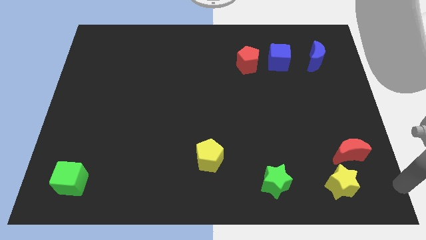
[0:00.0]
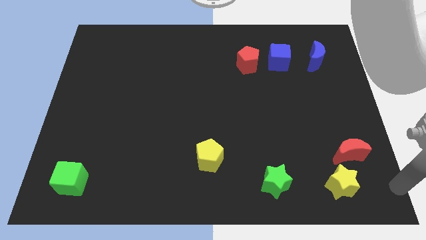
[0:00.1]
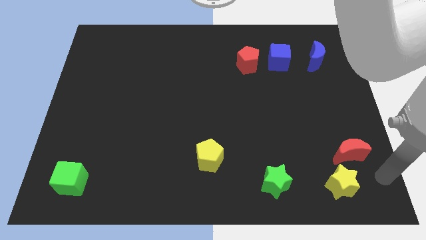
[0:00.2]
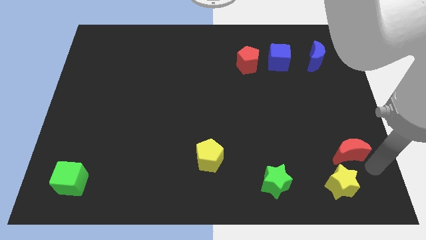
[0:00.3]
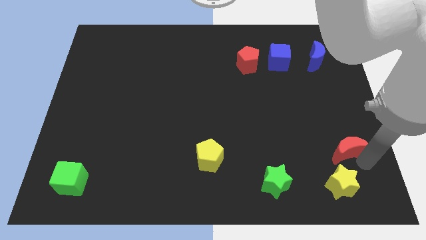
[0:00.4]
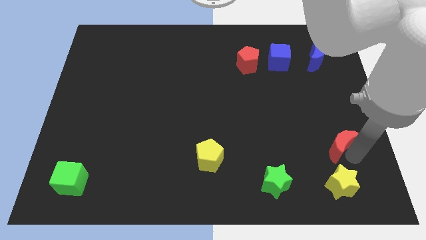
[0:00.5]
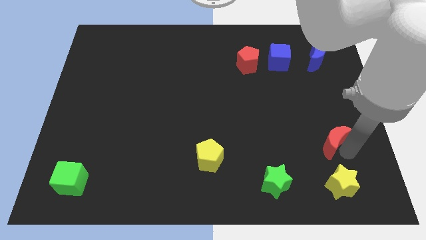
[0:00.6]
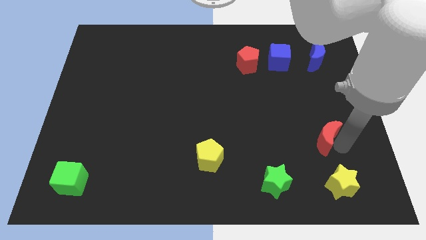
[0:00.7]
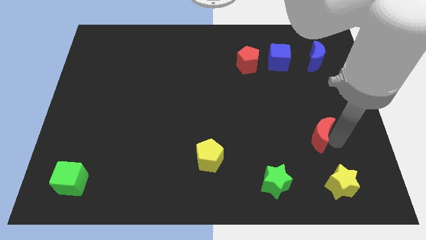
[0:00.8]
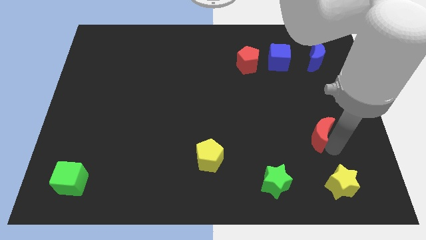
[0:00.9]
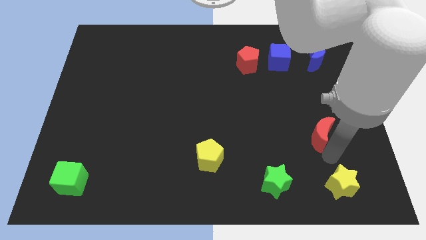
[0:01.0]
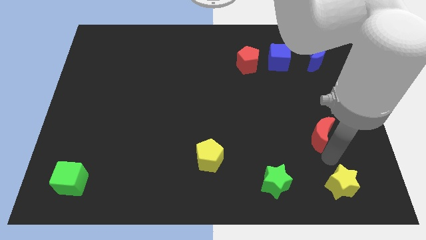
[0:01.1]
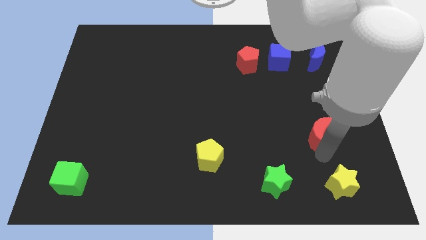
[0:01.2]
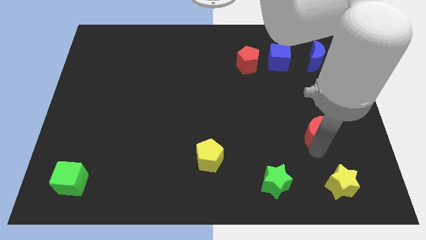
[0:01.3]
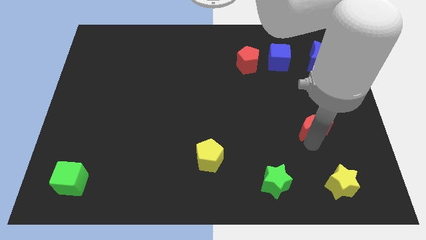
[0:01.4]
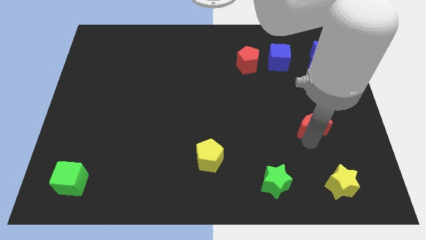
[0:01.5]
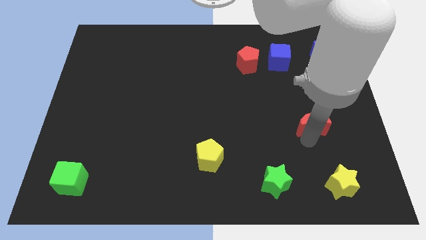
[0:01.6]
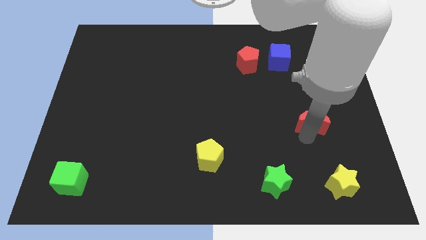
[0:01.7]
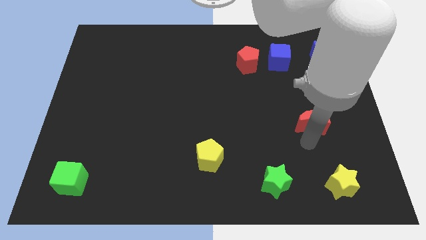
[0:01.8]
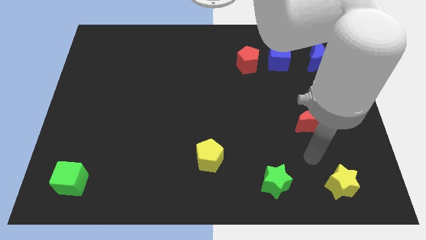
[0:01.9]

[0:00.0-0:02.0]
push the red crescent towards the blue cube

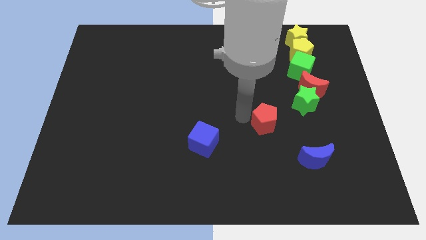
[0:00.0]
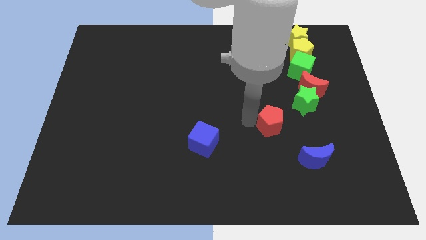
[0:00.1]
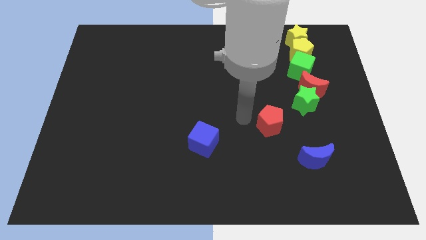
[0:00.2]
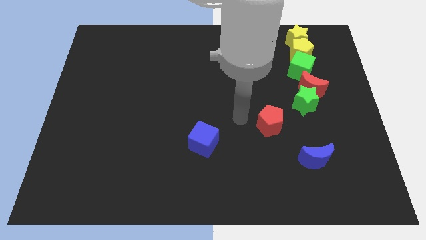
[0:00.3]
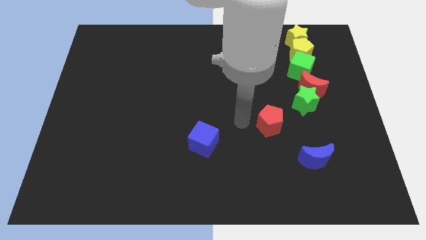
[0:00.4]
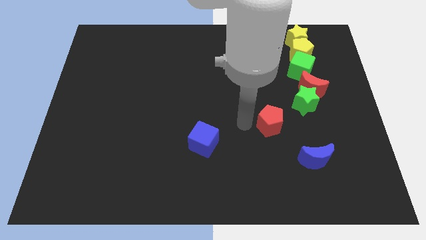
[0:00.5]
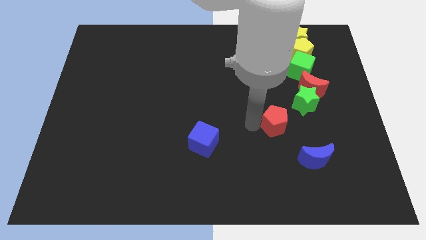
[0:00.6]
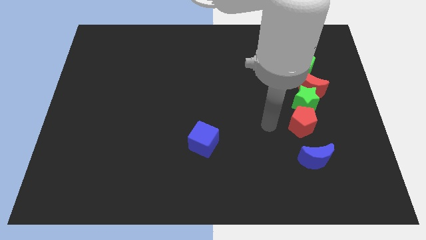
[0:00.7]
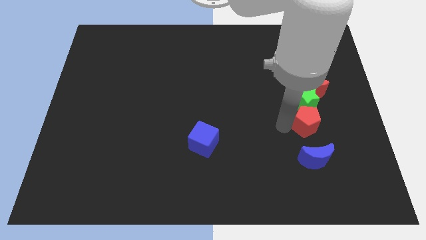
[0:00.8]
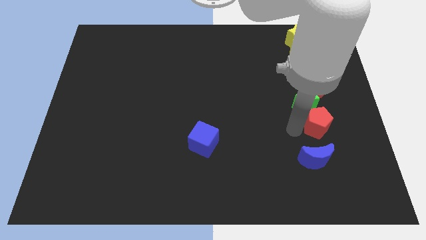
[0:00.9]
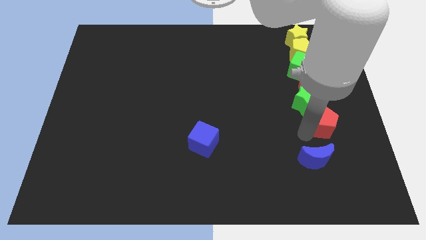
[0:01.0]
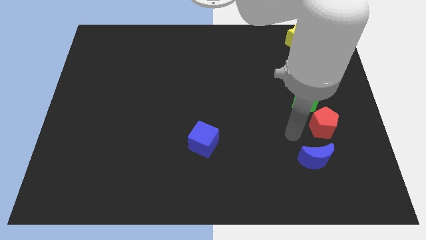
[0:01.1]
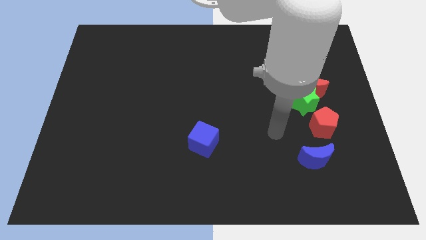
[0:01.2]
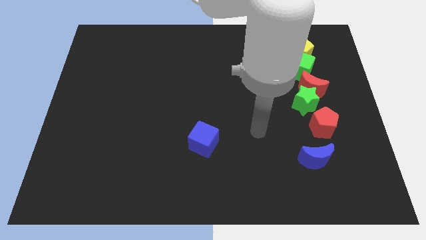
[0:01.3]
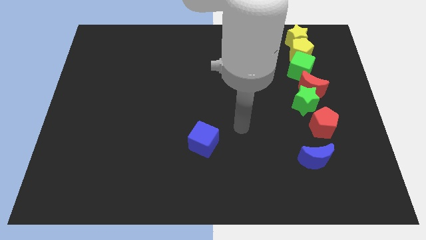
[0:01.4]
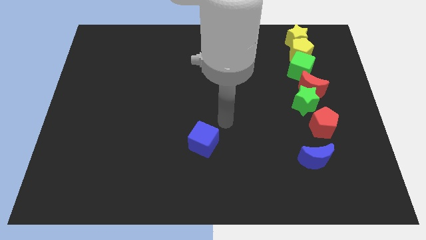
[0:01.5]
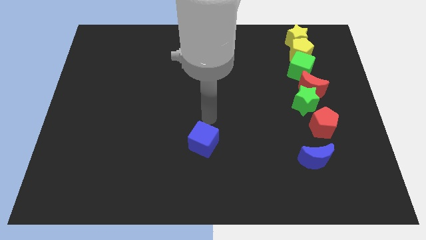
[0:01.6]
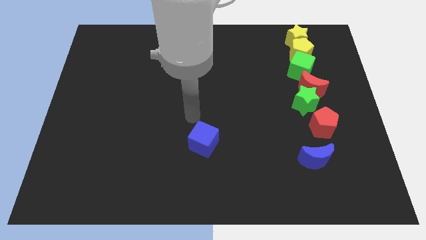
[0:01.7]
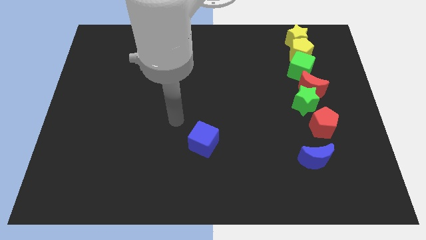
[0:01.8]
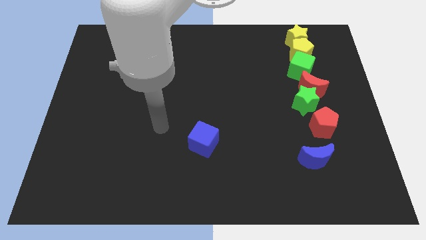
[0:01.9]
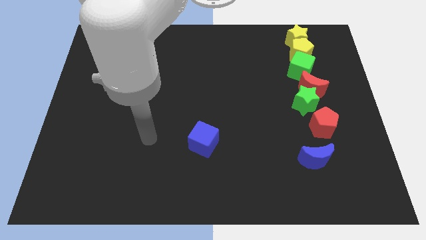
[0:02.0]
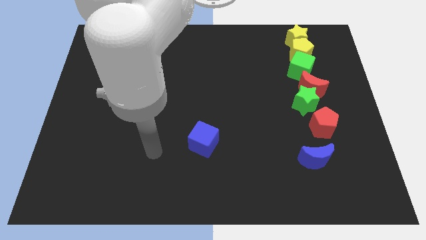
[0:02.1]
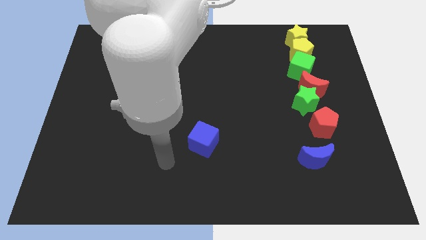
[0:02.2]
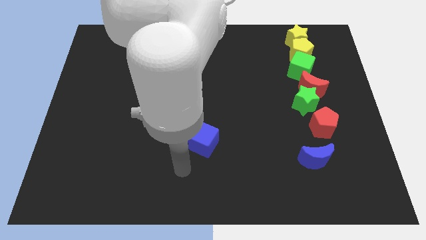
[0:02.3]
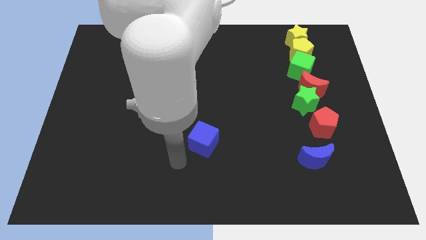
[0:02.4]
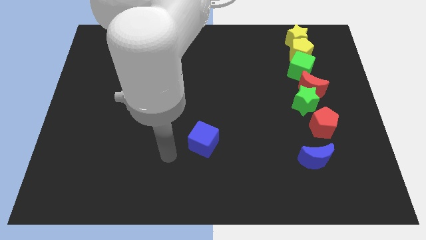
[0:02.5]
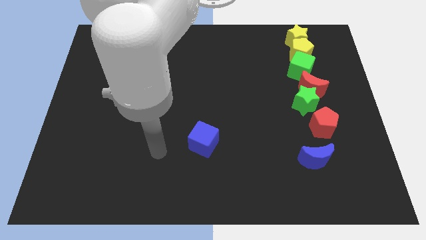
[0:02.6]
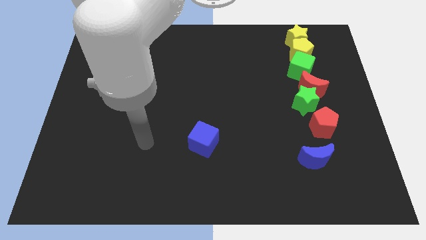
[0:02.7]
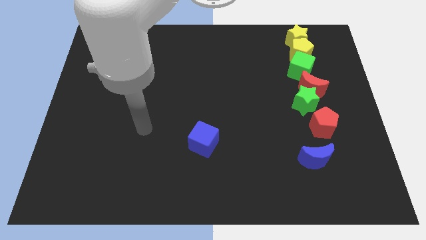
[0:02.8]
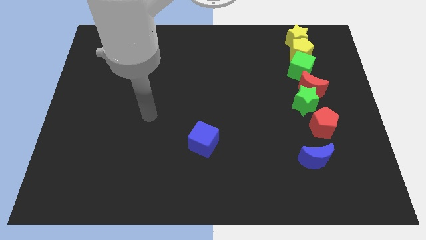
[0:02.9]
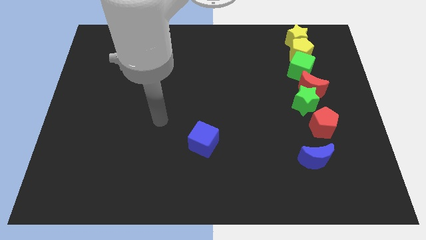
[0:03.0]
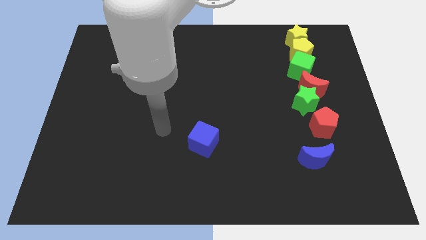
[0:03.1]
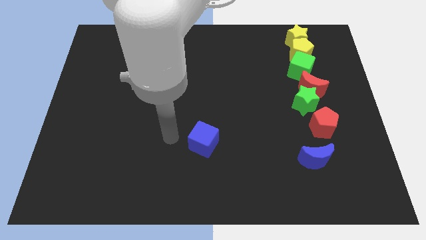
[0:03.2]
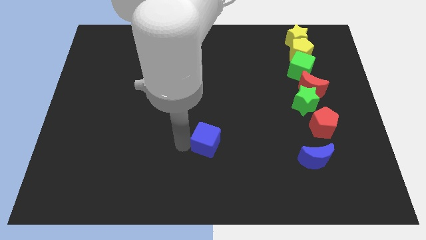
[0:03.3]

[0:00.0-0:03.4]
place the red pentagon vertically below the red moon

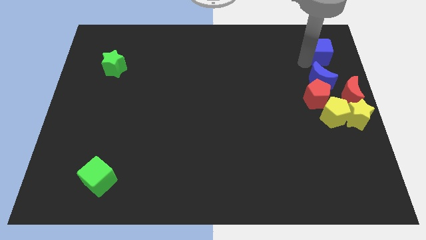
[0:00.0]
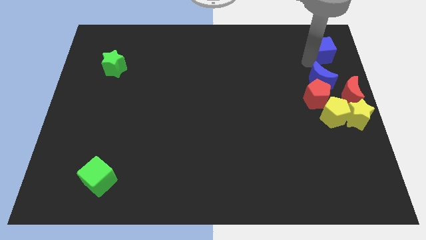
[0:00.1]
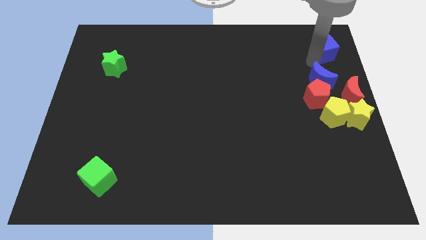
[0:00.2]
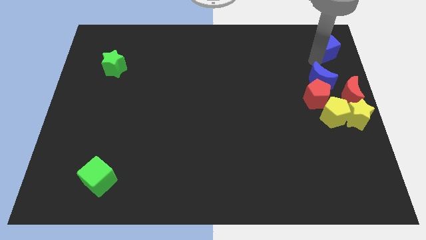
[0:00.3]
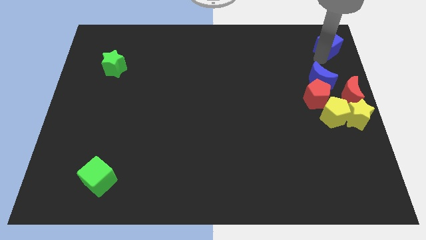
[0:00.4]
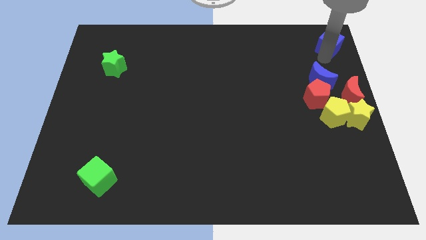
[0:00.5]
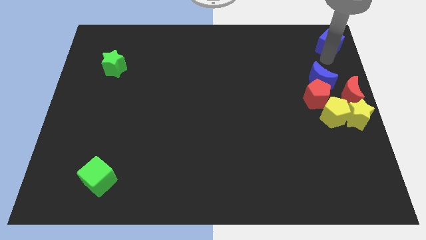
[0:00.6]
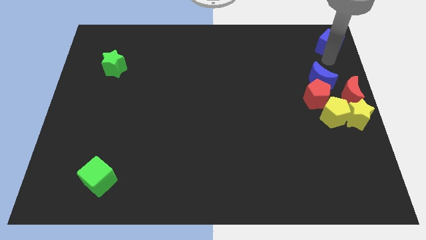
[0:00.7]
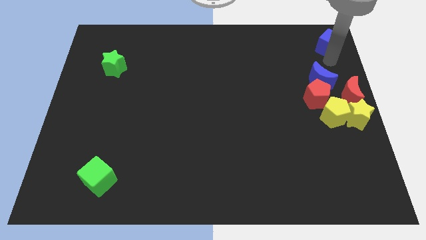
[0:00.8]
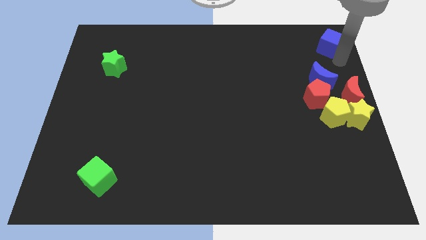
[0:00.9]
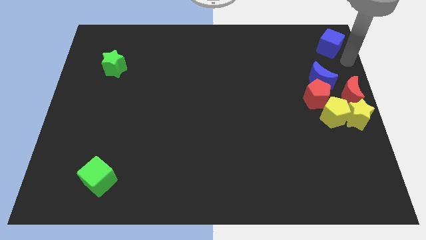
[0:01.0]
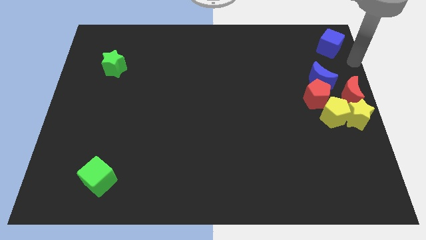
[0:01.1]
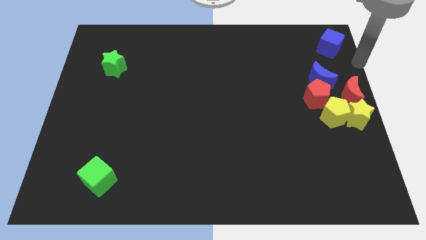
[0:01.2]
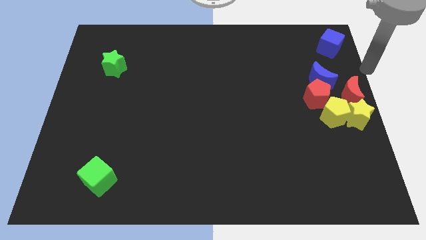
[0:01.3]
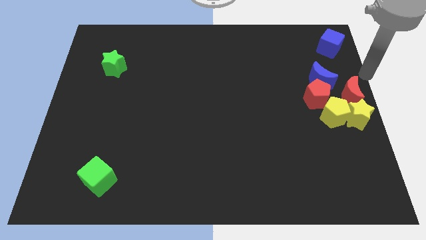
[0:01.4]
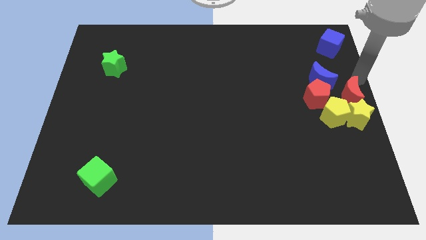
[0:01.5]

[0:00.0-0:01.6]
move the blue cube to the top right corner

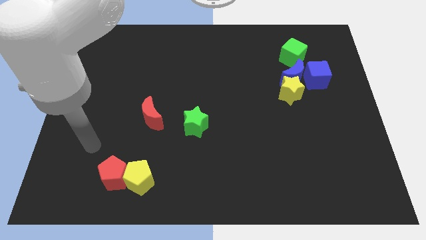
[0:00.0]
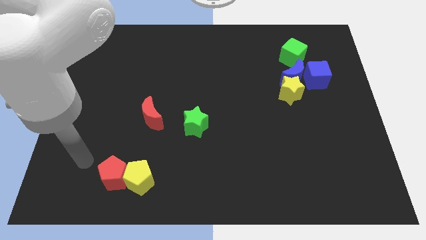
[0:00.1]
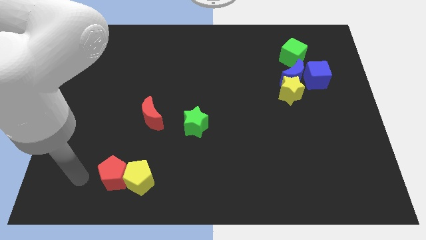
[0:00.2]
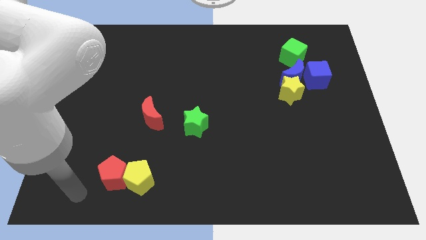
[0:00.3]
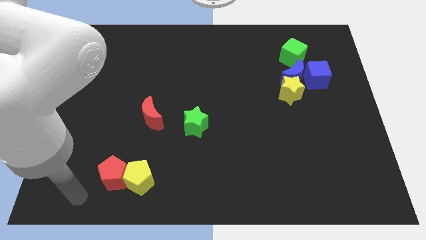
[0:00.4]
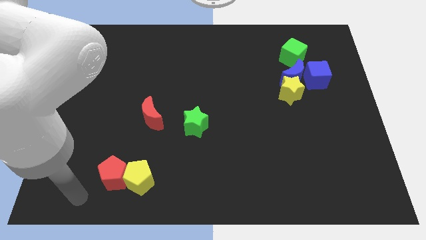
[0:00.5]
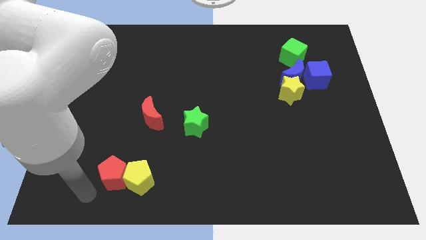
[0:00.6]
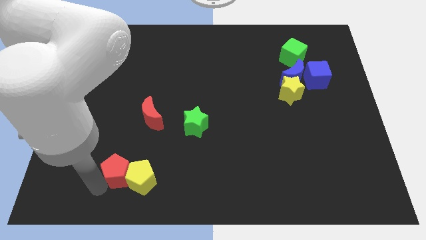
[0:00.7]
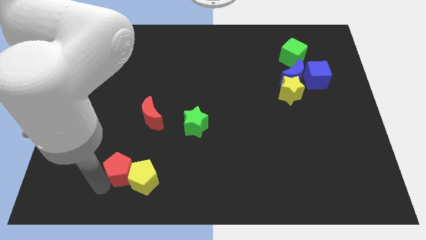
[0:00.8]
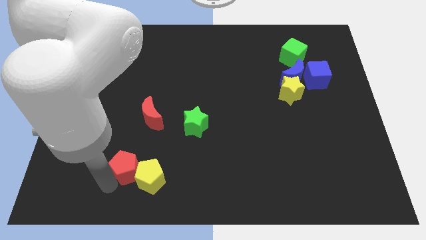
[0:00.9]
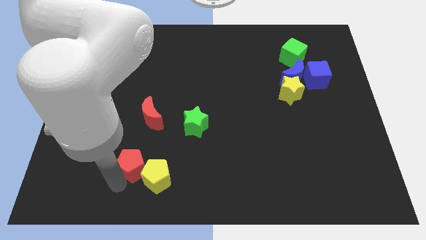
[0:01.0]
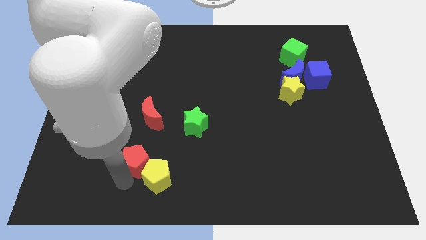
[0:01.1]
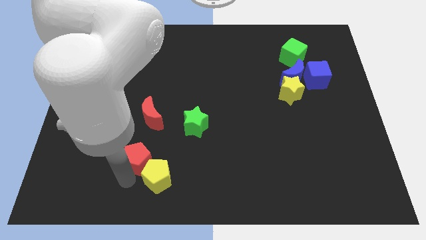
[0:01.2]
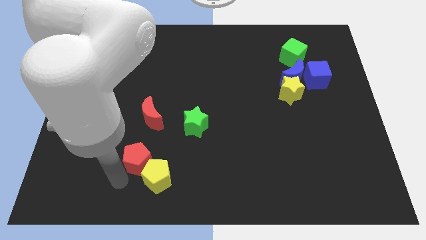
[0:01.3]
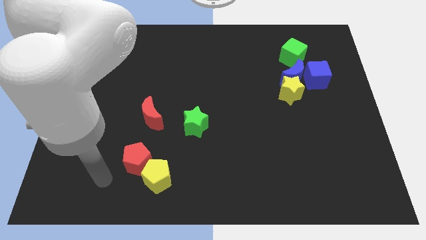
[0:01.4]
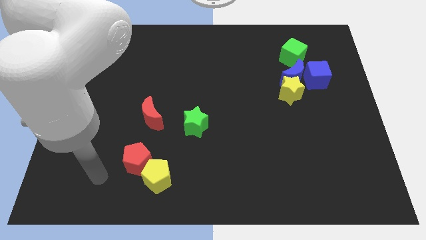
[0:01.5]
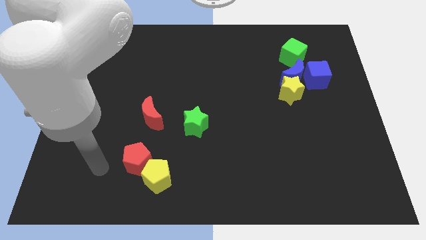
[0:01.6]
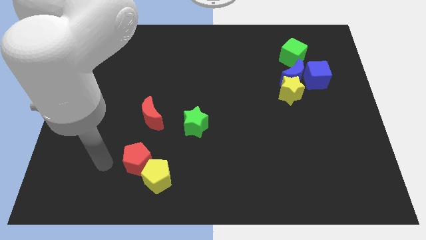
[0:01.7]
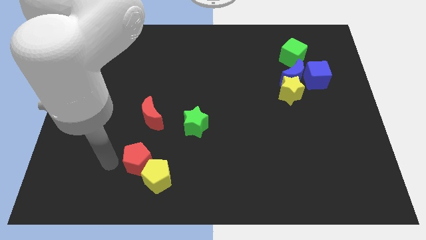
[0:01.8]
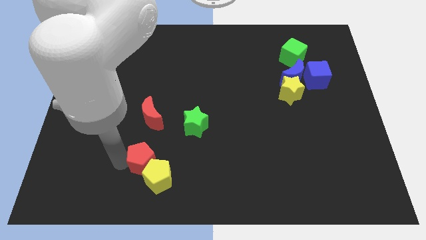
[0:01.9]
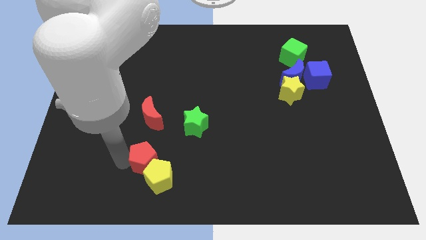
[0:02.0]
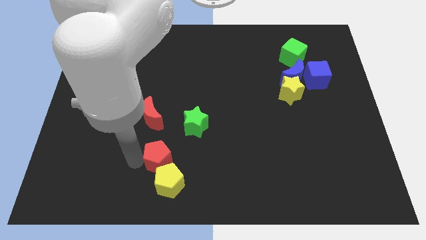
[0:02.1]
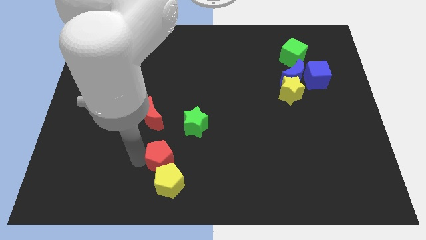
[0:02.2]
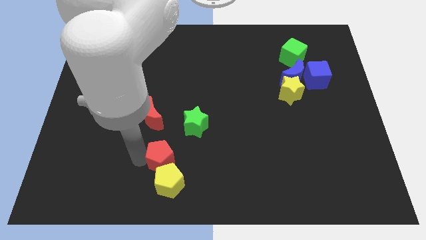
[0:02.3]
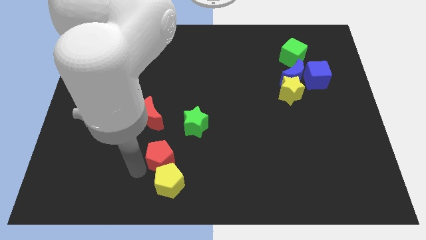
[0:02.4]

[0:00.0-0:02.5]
place red pentagon above yellow pentagon
